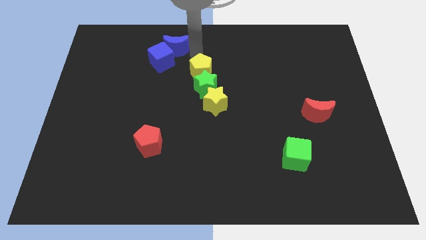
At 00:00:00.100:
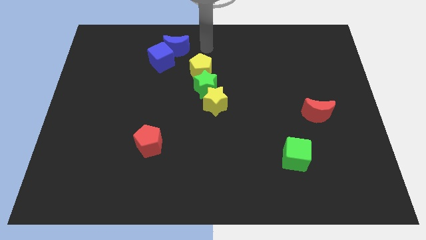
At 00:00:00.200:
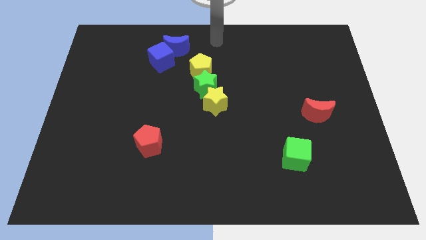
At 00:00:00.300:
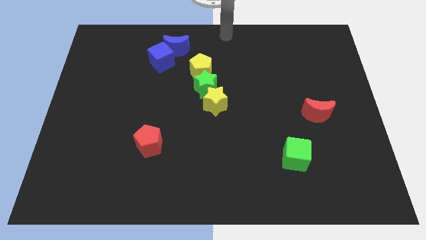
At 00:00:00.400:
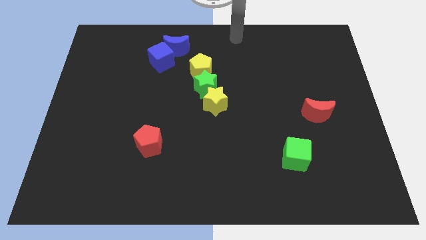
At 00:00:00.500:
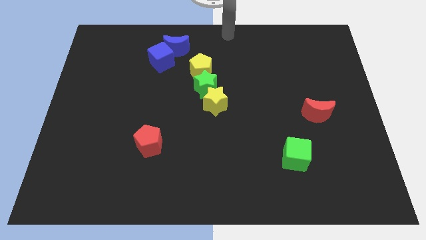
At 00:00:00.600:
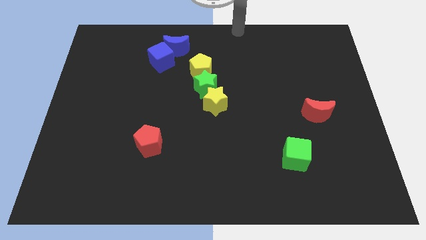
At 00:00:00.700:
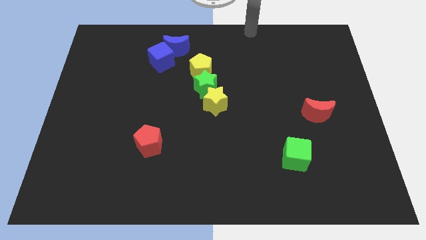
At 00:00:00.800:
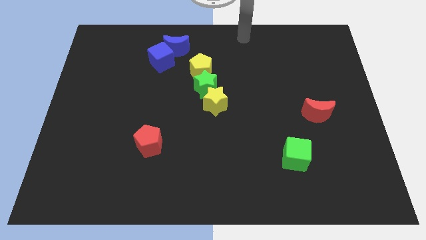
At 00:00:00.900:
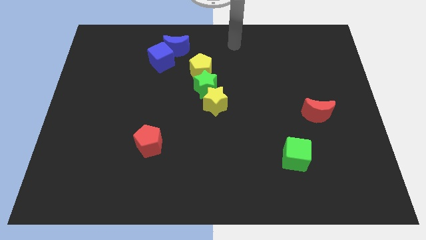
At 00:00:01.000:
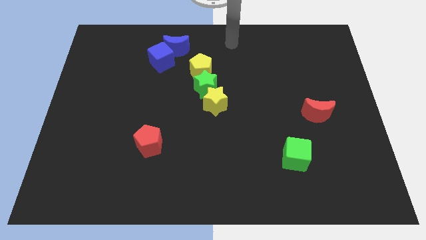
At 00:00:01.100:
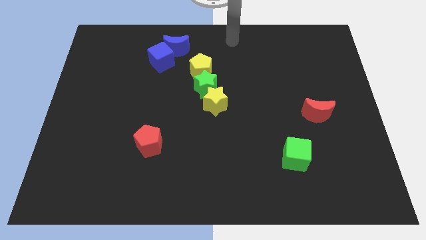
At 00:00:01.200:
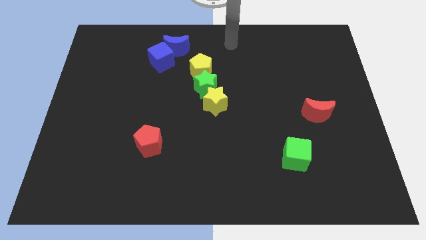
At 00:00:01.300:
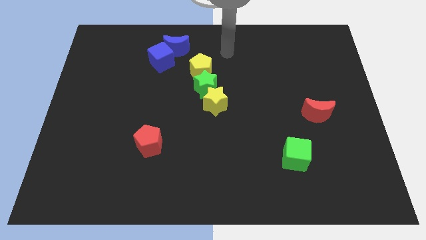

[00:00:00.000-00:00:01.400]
push yellow pentagon slightly

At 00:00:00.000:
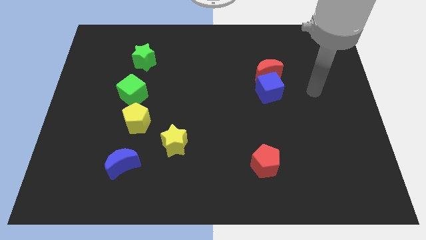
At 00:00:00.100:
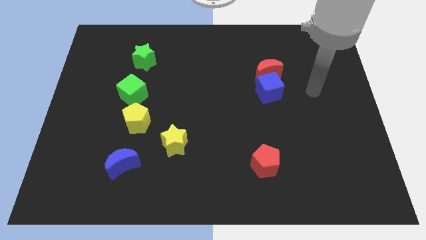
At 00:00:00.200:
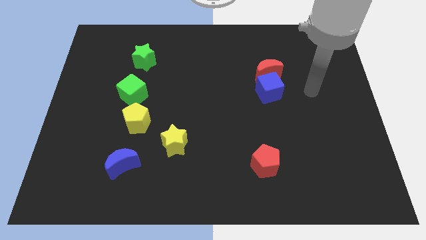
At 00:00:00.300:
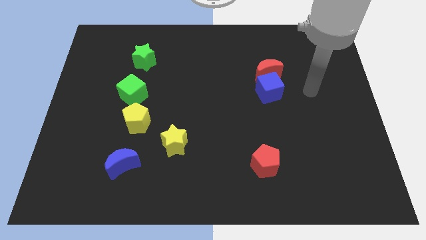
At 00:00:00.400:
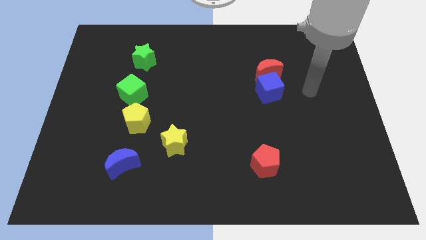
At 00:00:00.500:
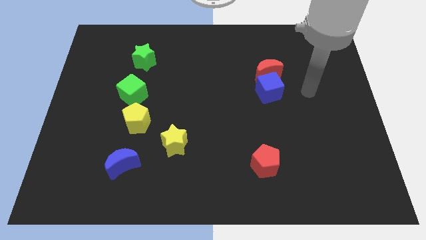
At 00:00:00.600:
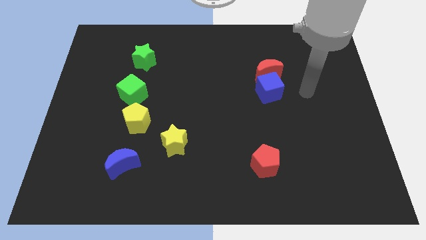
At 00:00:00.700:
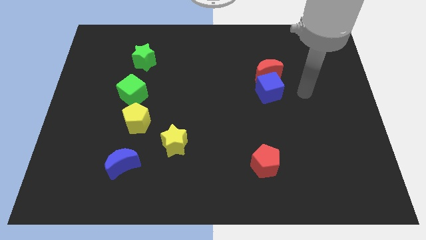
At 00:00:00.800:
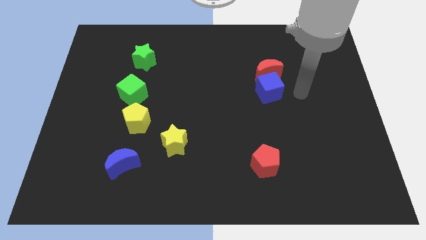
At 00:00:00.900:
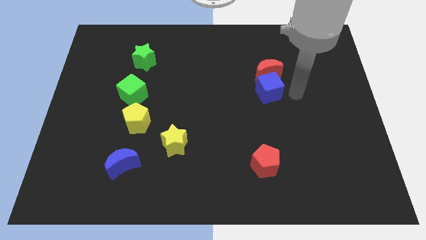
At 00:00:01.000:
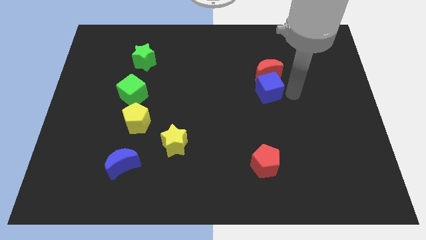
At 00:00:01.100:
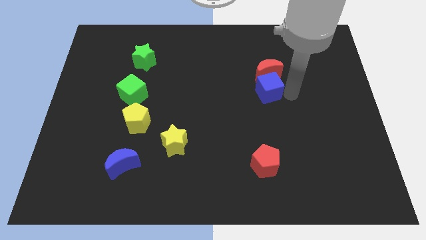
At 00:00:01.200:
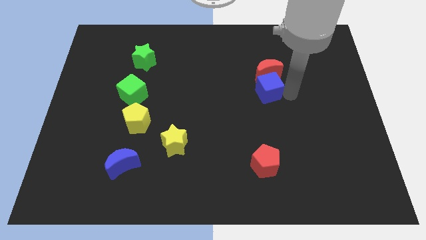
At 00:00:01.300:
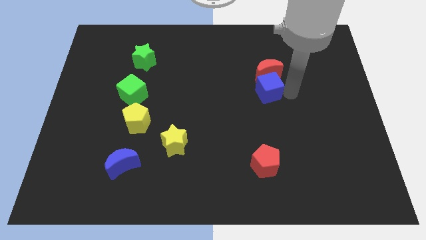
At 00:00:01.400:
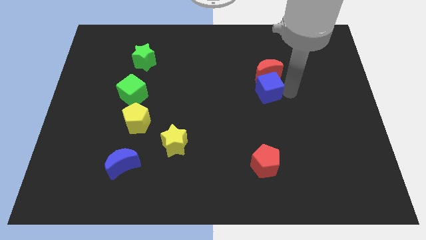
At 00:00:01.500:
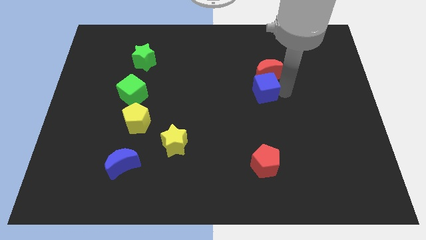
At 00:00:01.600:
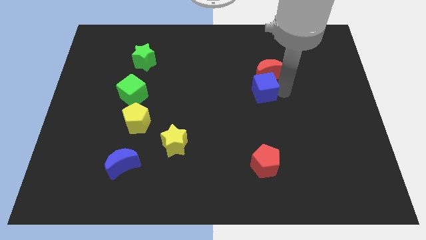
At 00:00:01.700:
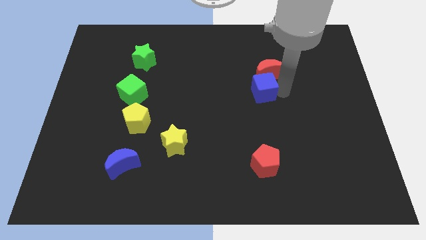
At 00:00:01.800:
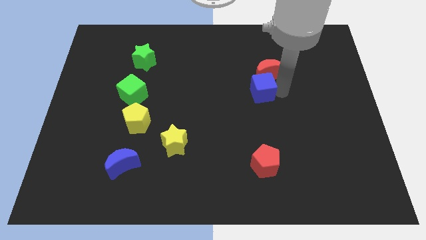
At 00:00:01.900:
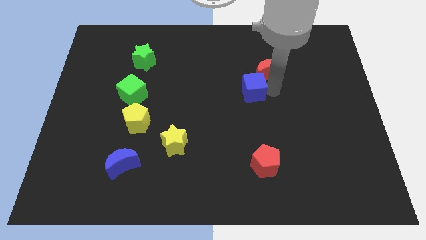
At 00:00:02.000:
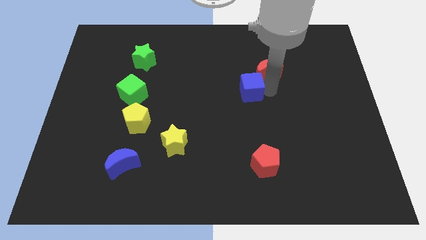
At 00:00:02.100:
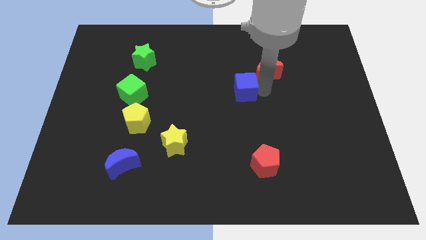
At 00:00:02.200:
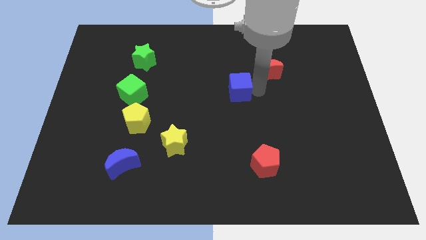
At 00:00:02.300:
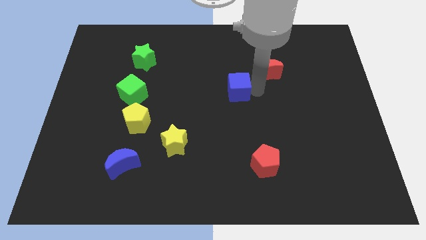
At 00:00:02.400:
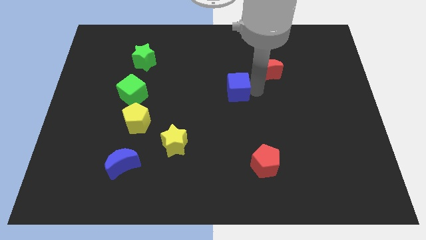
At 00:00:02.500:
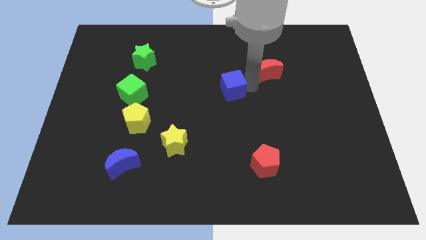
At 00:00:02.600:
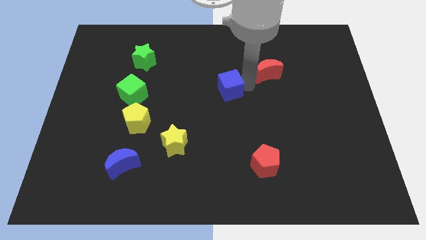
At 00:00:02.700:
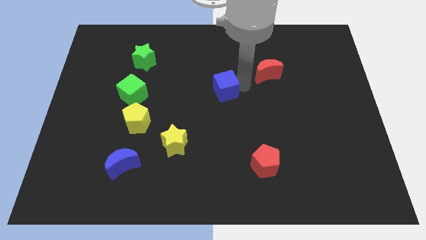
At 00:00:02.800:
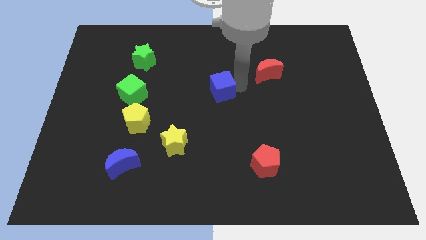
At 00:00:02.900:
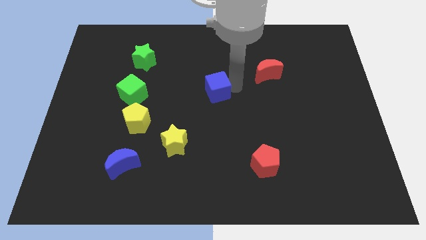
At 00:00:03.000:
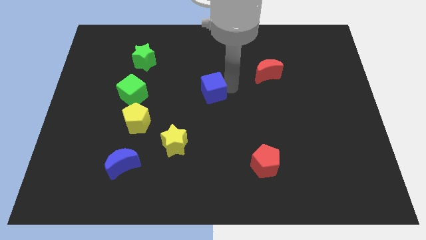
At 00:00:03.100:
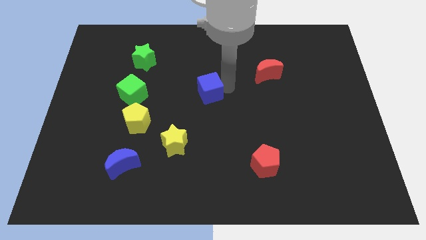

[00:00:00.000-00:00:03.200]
move the arm towards the centre of the board

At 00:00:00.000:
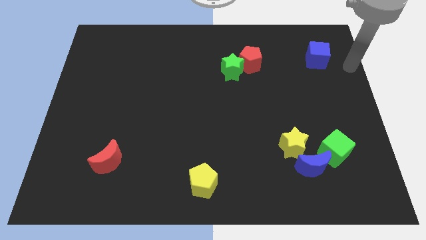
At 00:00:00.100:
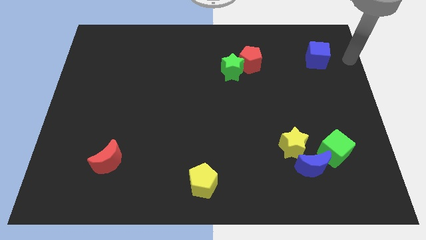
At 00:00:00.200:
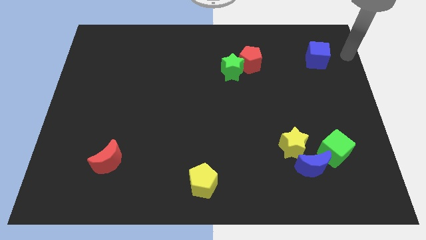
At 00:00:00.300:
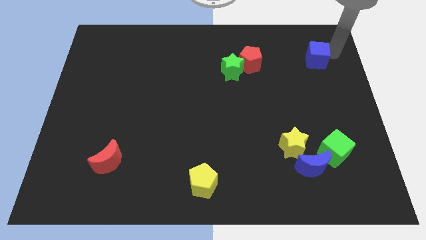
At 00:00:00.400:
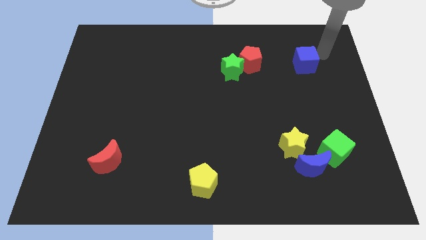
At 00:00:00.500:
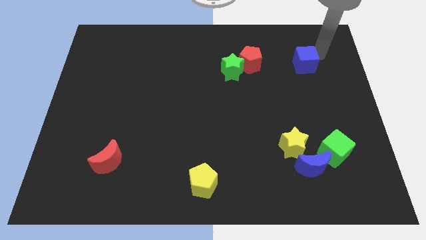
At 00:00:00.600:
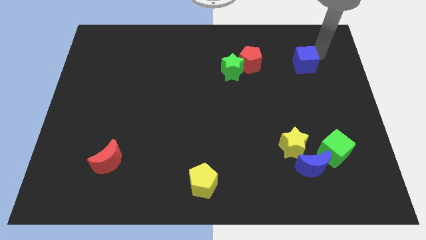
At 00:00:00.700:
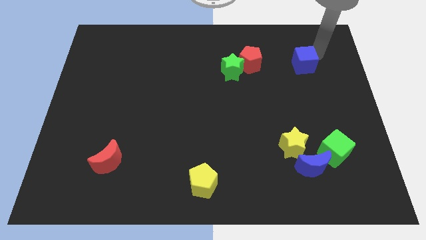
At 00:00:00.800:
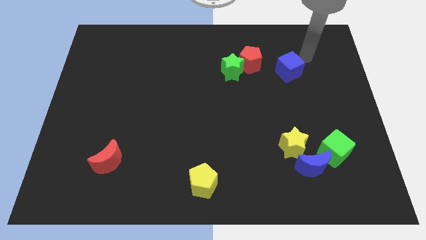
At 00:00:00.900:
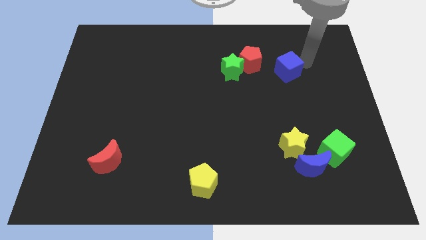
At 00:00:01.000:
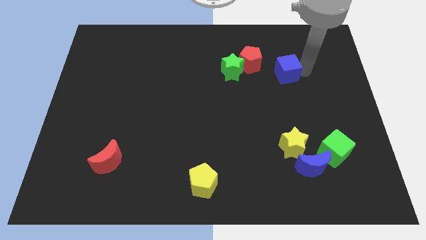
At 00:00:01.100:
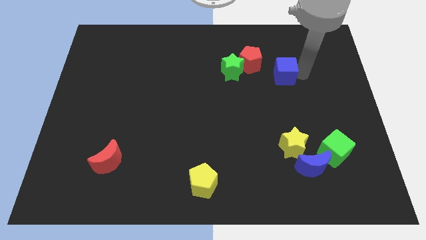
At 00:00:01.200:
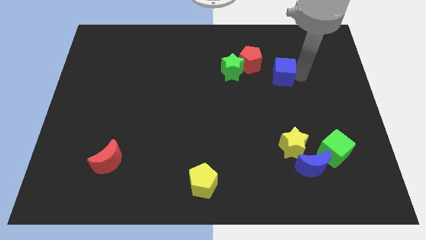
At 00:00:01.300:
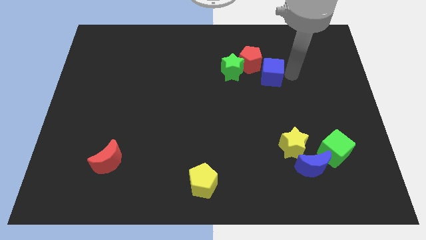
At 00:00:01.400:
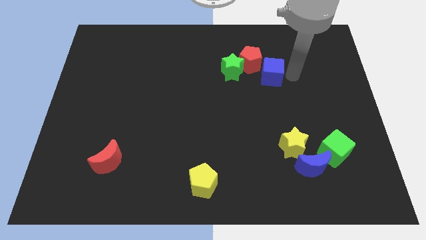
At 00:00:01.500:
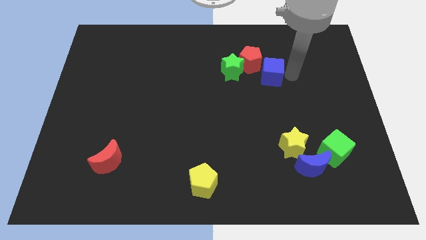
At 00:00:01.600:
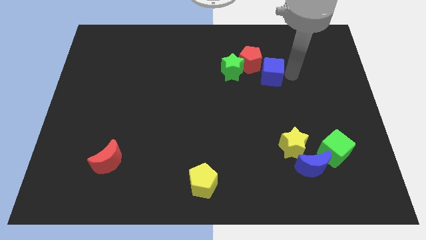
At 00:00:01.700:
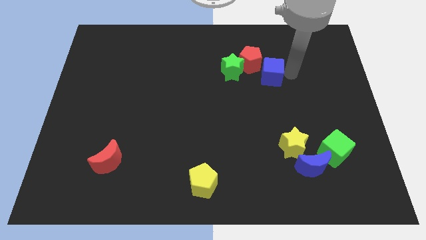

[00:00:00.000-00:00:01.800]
move the blue cube to the bottom right side of the red pentagon

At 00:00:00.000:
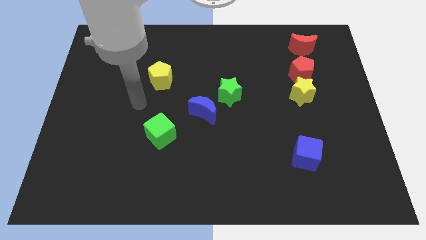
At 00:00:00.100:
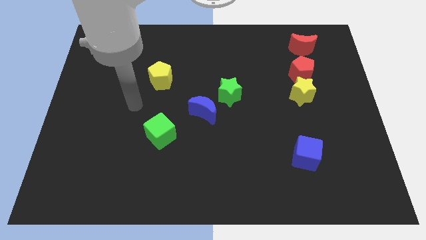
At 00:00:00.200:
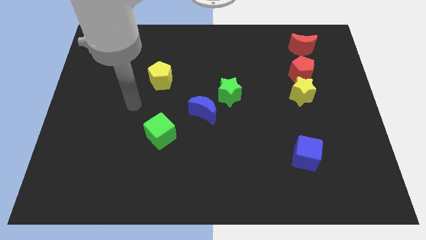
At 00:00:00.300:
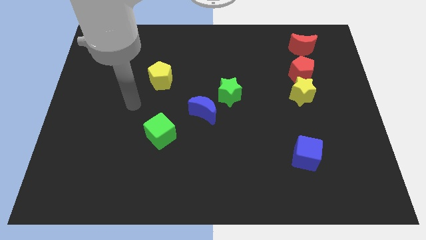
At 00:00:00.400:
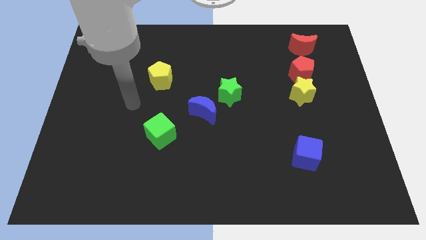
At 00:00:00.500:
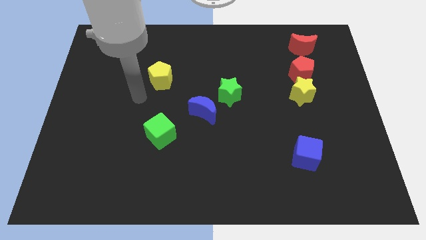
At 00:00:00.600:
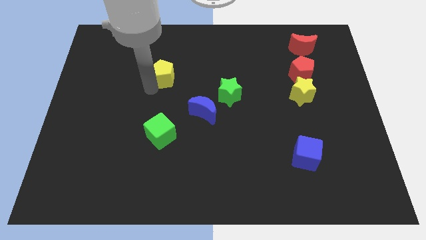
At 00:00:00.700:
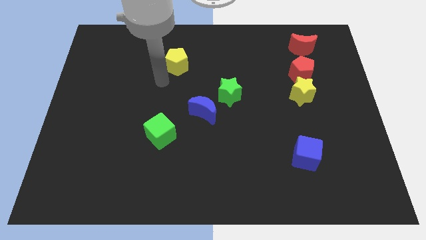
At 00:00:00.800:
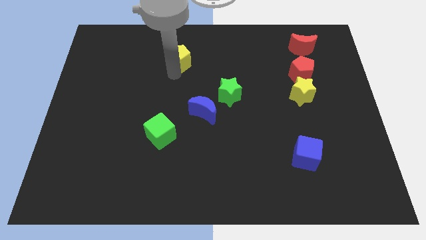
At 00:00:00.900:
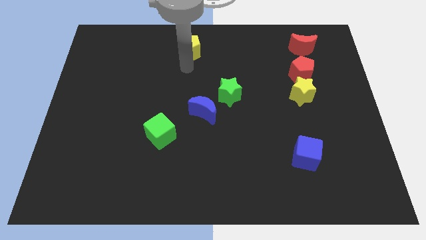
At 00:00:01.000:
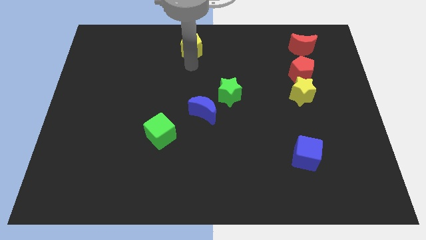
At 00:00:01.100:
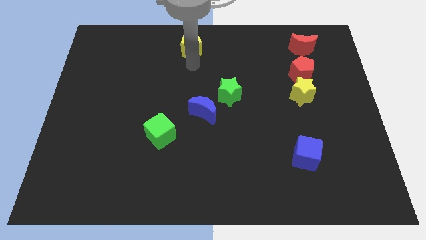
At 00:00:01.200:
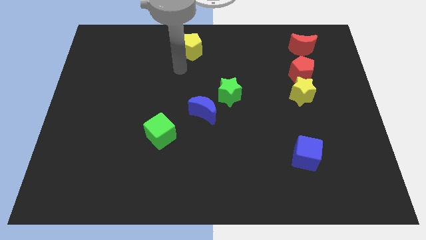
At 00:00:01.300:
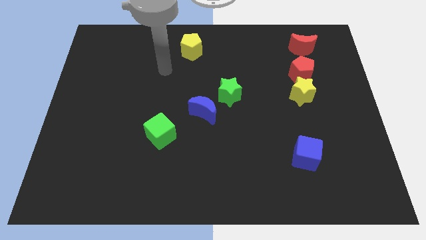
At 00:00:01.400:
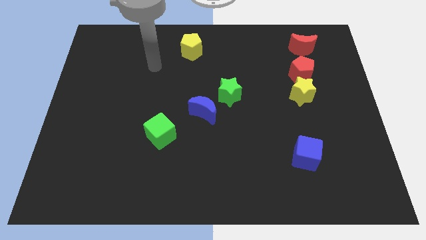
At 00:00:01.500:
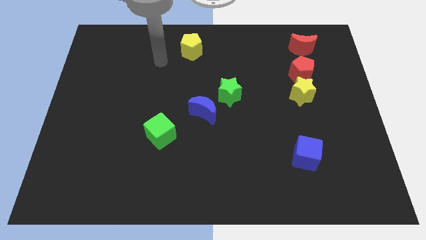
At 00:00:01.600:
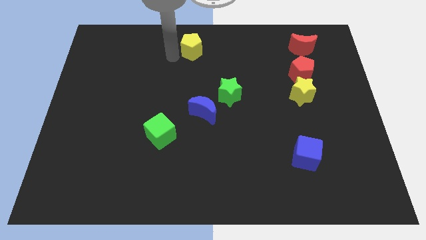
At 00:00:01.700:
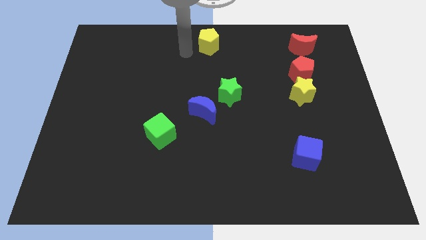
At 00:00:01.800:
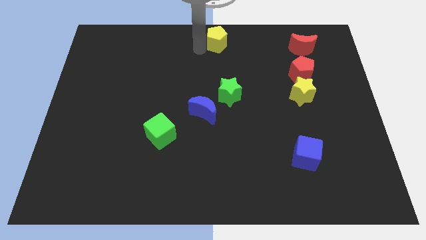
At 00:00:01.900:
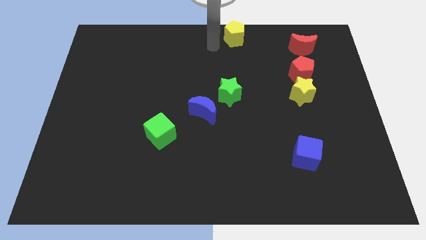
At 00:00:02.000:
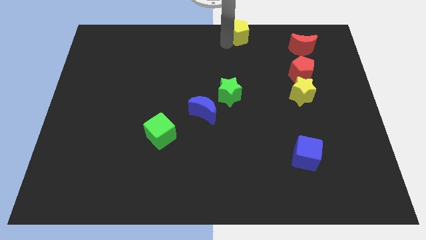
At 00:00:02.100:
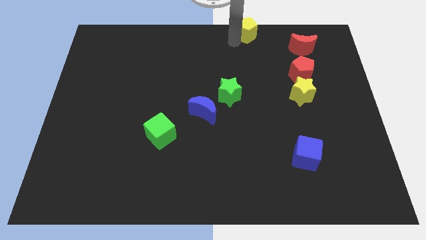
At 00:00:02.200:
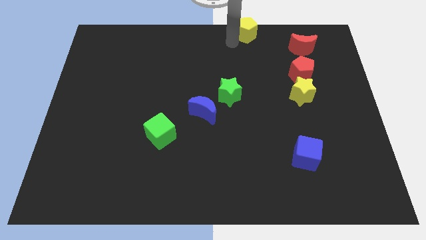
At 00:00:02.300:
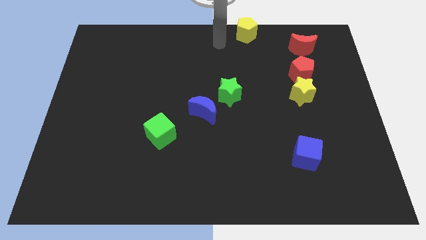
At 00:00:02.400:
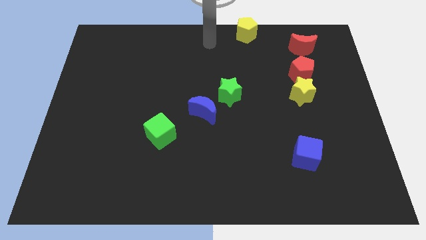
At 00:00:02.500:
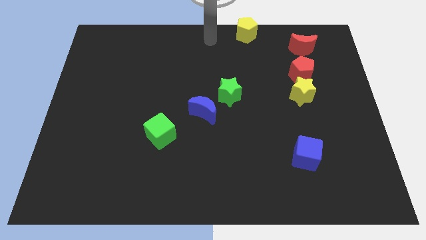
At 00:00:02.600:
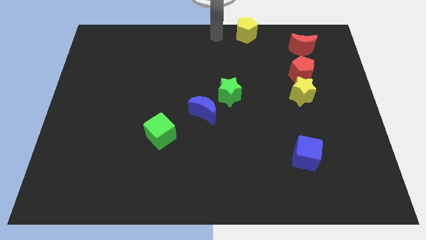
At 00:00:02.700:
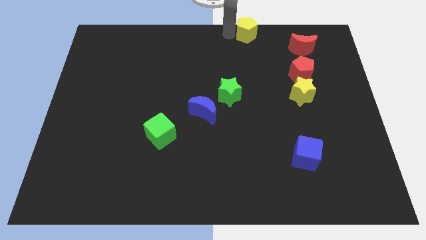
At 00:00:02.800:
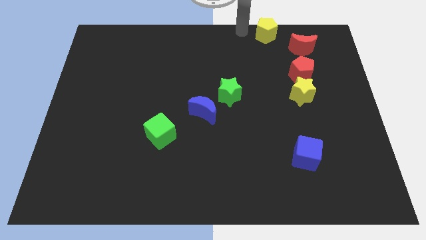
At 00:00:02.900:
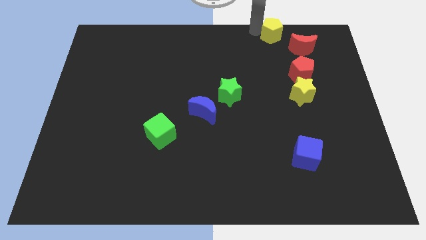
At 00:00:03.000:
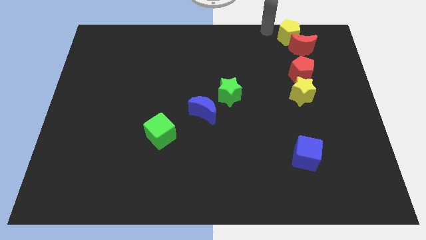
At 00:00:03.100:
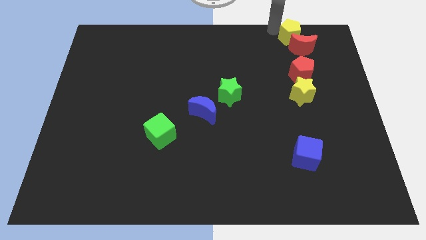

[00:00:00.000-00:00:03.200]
push the yellow pentagon on the top of red crescent
